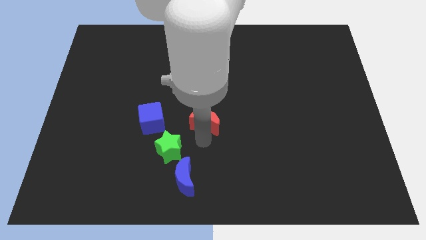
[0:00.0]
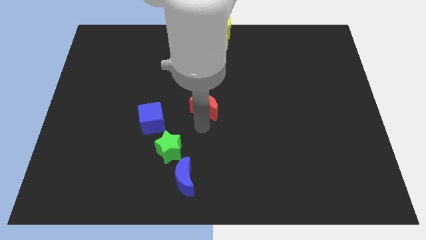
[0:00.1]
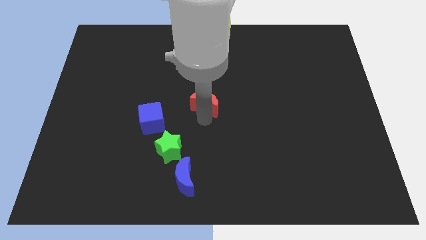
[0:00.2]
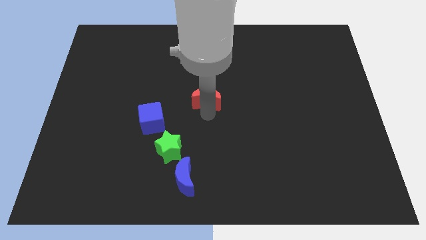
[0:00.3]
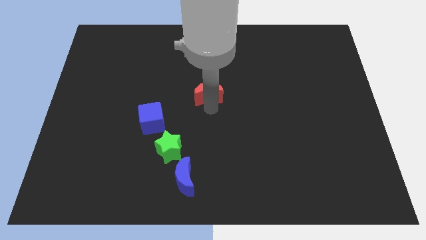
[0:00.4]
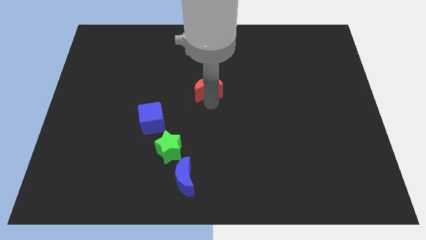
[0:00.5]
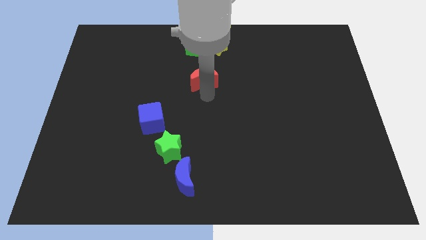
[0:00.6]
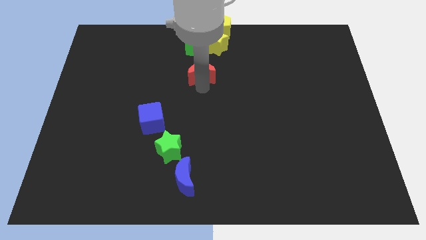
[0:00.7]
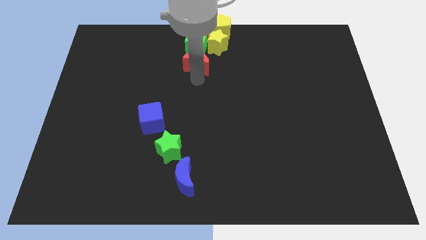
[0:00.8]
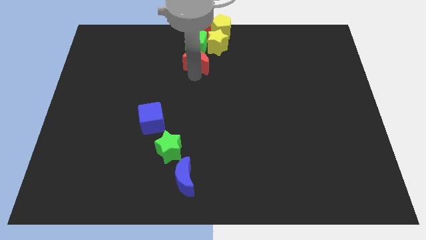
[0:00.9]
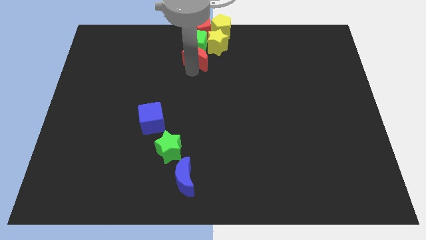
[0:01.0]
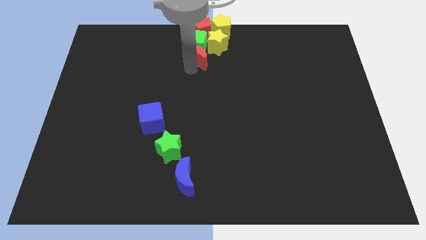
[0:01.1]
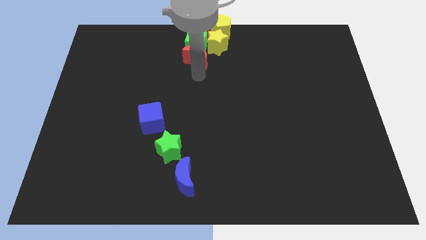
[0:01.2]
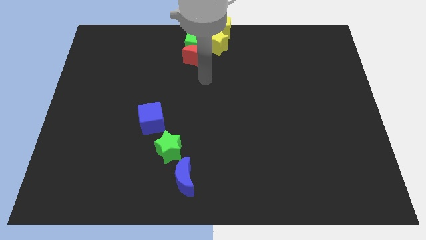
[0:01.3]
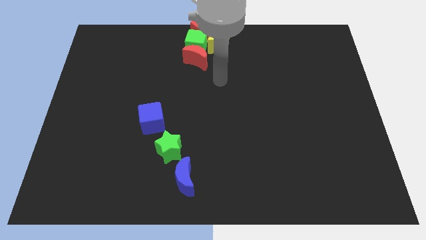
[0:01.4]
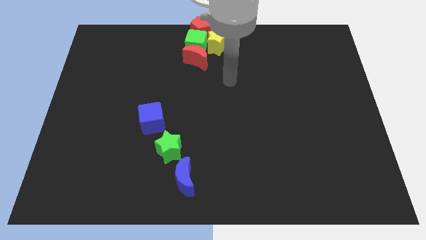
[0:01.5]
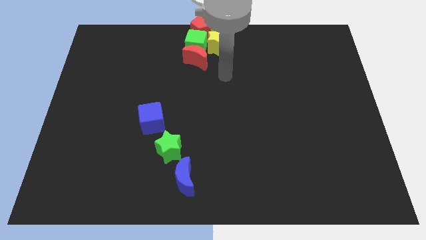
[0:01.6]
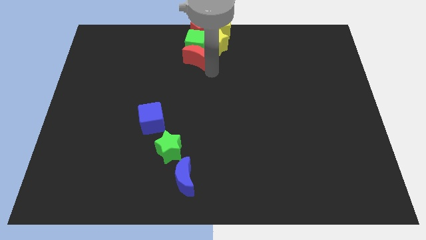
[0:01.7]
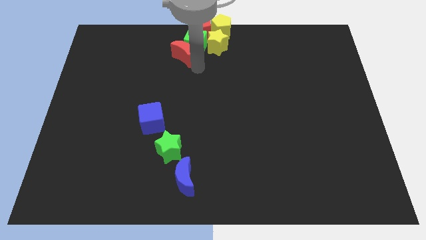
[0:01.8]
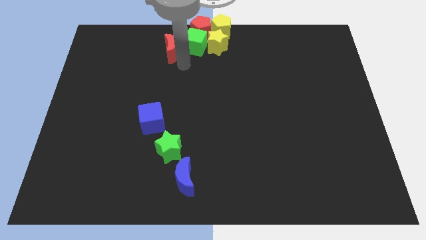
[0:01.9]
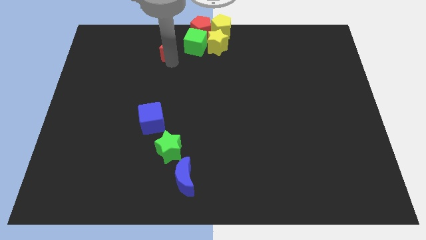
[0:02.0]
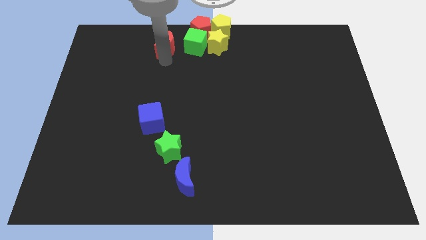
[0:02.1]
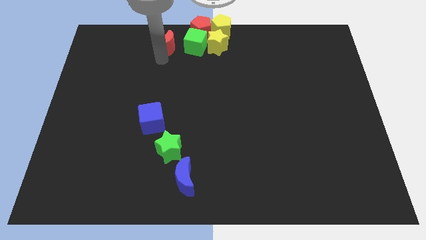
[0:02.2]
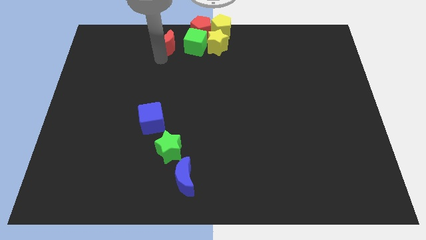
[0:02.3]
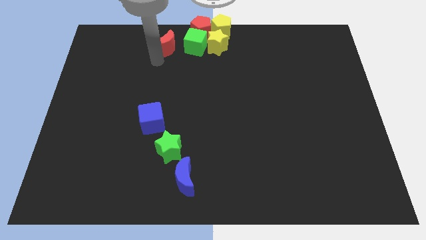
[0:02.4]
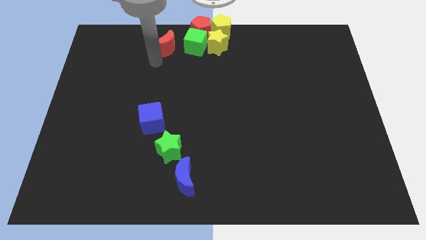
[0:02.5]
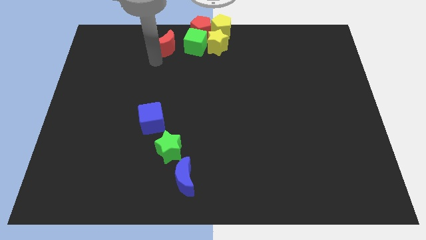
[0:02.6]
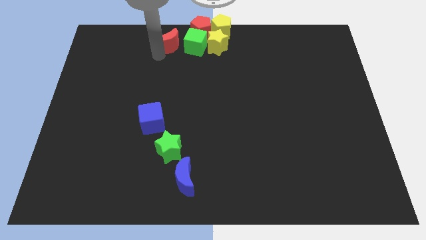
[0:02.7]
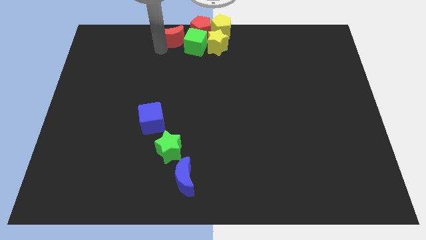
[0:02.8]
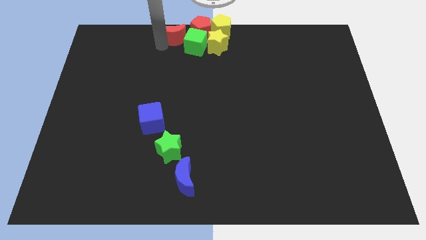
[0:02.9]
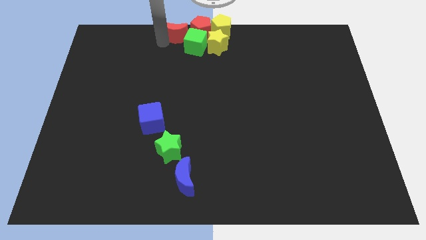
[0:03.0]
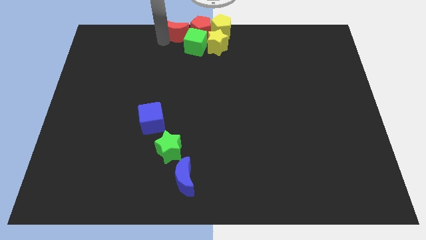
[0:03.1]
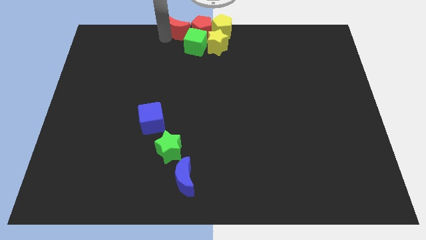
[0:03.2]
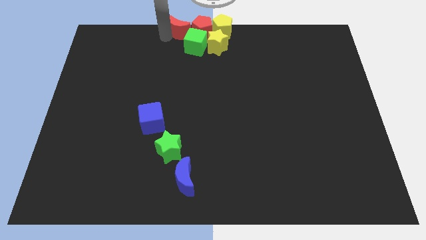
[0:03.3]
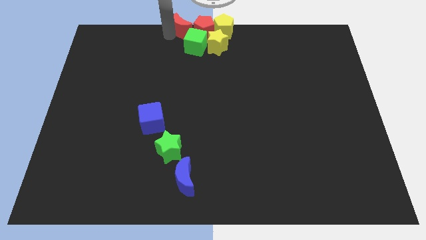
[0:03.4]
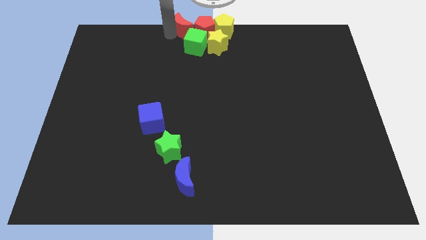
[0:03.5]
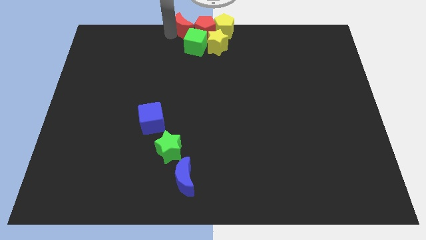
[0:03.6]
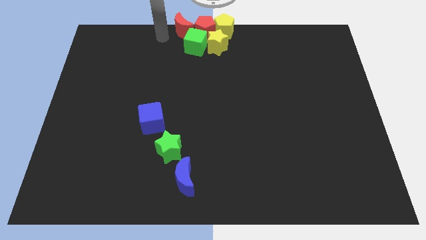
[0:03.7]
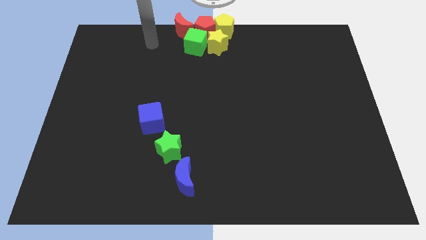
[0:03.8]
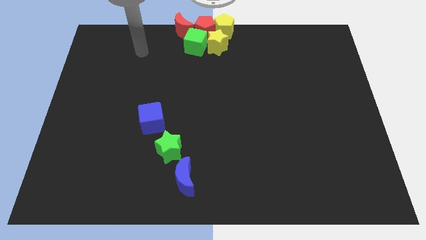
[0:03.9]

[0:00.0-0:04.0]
place red moon adjacent to red pentagon

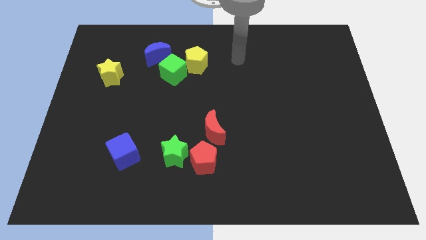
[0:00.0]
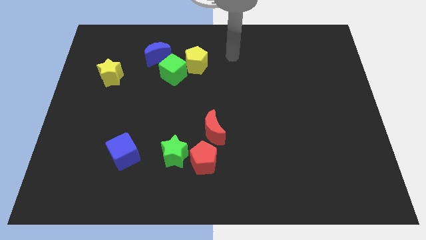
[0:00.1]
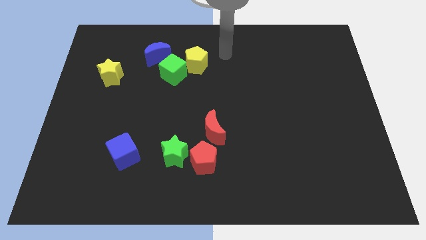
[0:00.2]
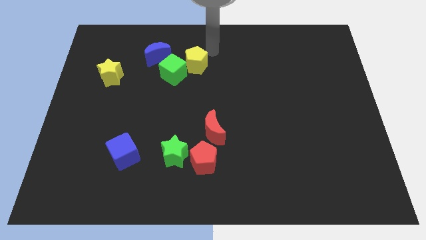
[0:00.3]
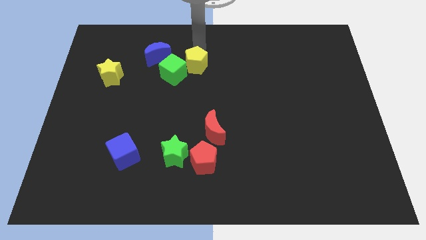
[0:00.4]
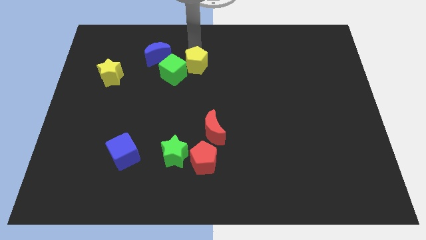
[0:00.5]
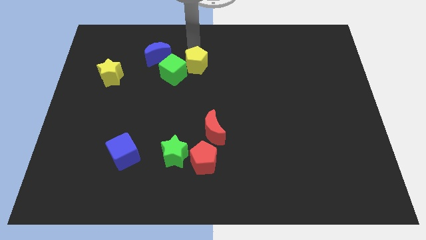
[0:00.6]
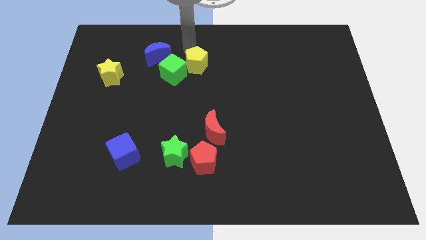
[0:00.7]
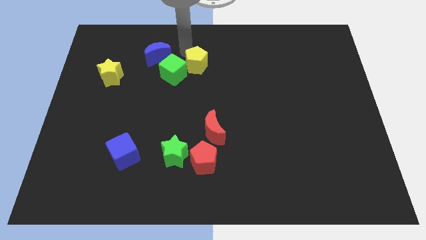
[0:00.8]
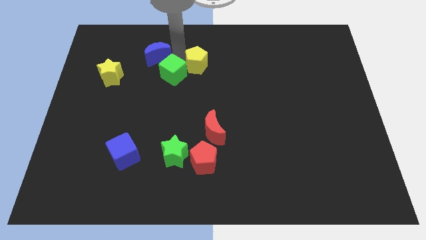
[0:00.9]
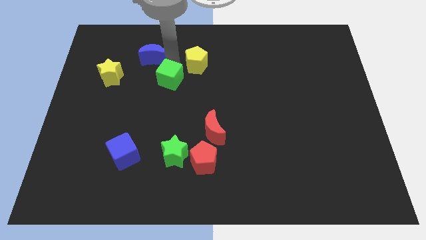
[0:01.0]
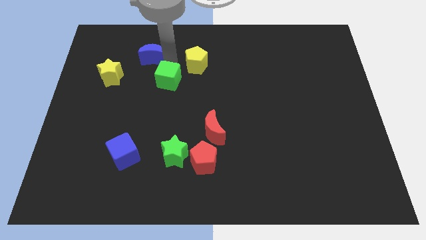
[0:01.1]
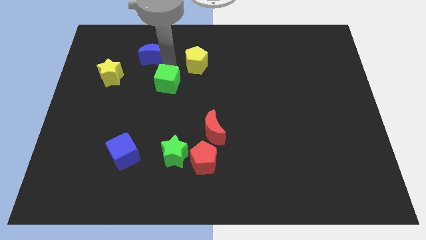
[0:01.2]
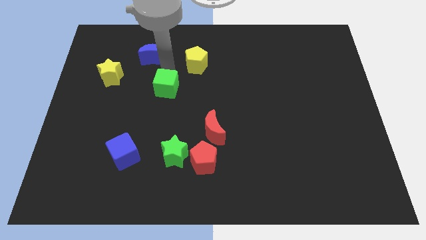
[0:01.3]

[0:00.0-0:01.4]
move green cube slightly down

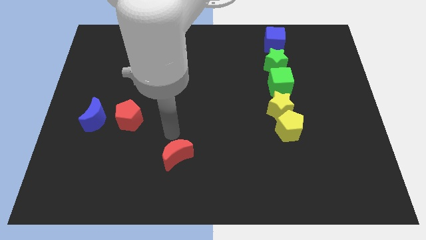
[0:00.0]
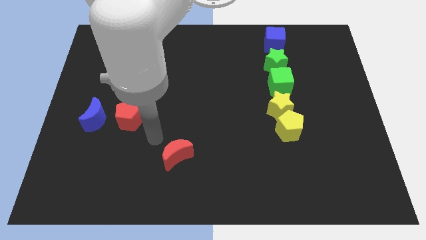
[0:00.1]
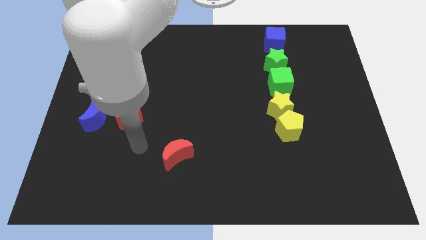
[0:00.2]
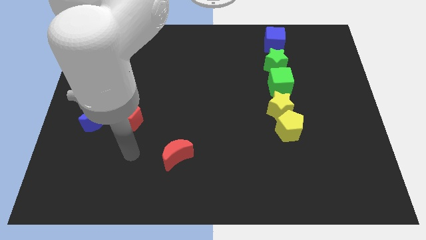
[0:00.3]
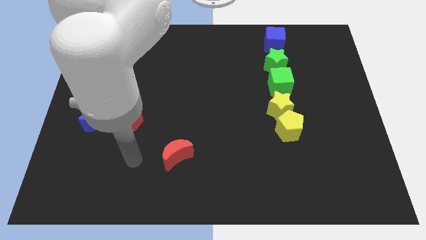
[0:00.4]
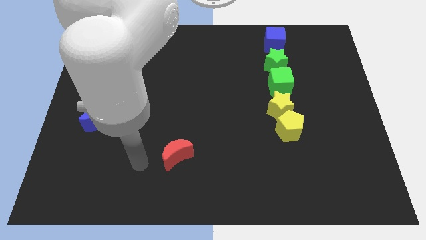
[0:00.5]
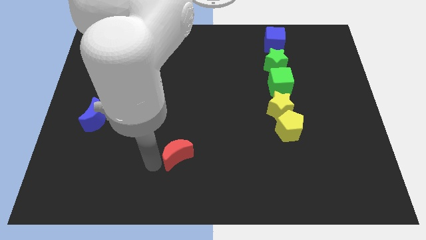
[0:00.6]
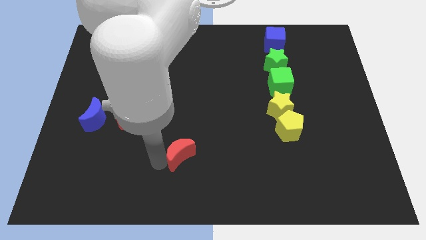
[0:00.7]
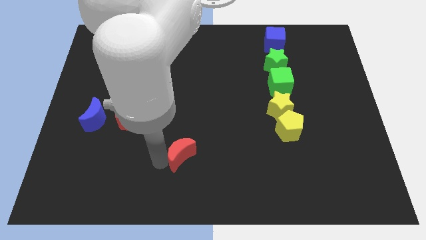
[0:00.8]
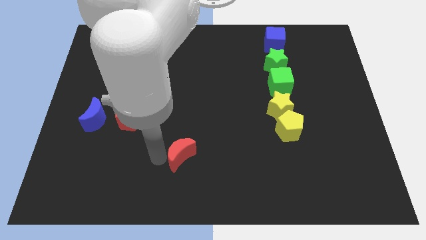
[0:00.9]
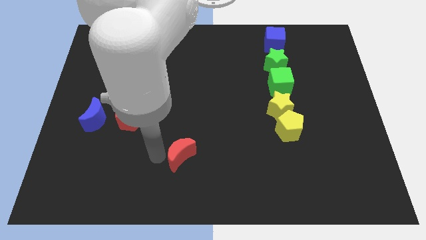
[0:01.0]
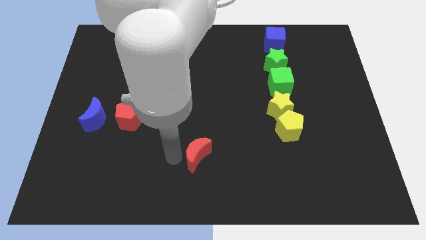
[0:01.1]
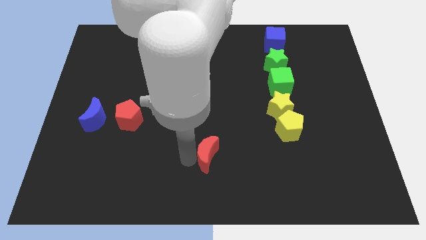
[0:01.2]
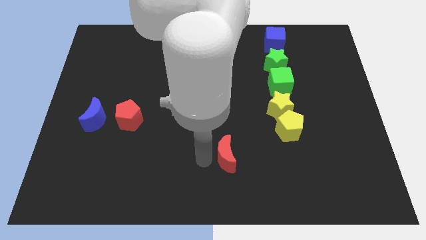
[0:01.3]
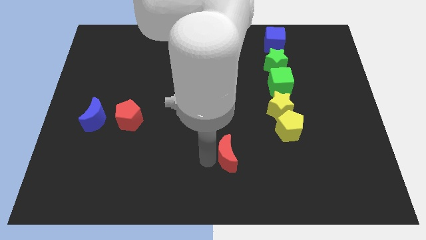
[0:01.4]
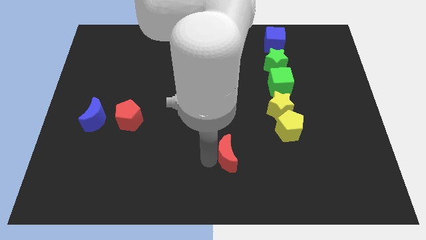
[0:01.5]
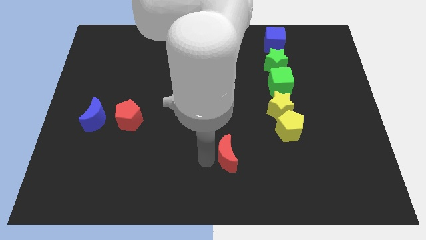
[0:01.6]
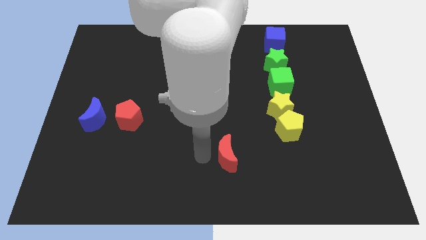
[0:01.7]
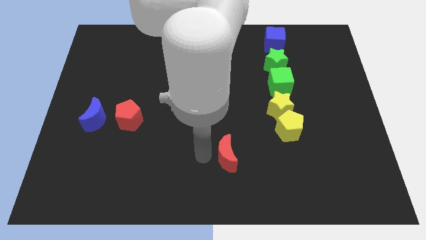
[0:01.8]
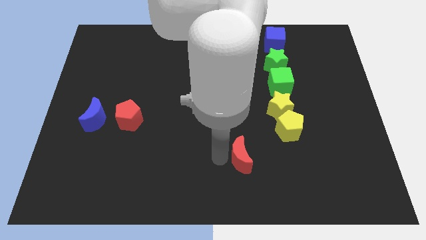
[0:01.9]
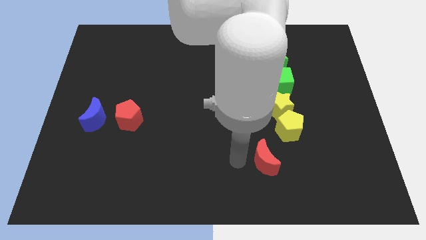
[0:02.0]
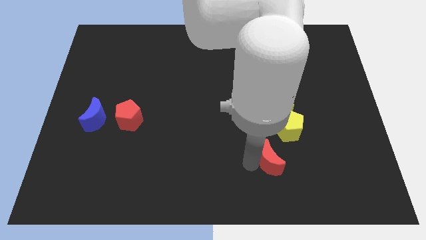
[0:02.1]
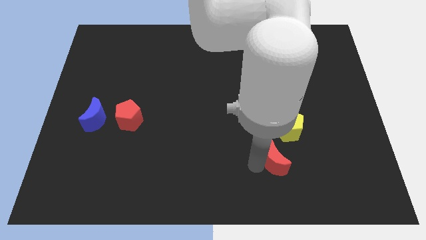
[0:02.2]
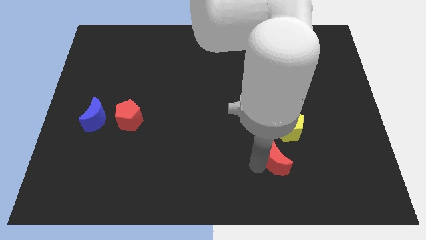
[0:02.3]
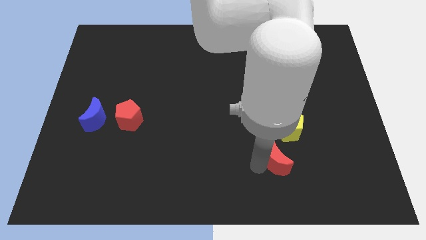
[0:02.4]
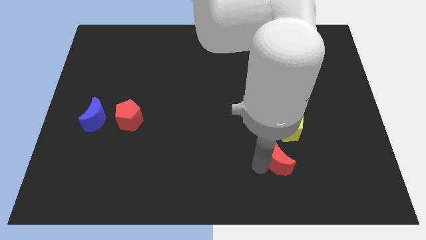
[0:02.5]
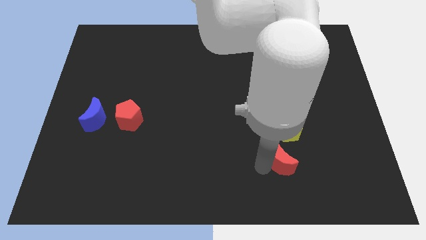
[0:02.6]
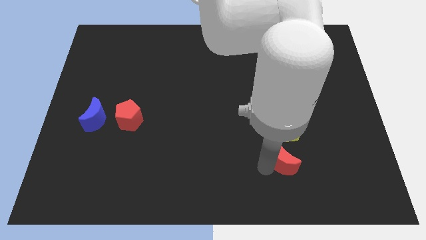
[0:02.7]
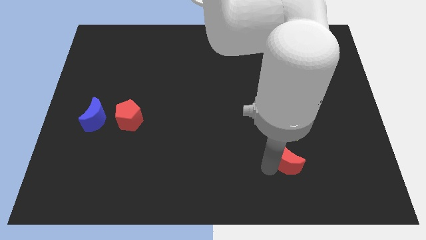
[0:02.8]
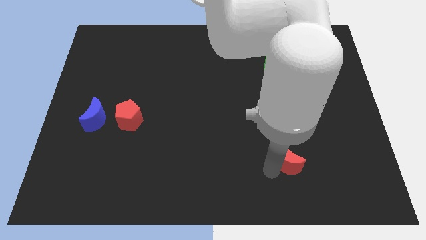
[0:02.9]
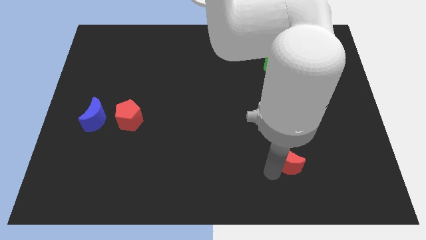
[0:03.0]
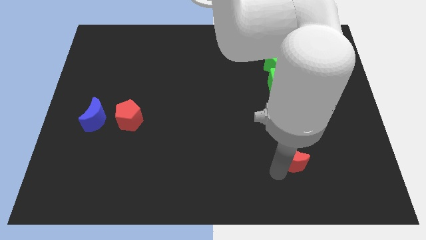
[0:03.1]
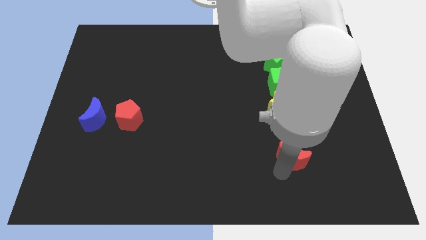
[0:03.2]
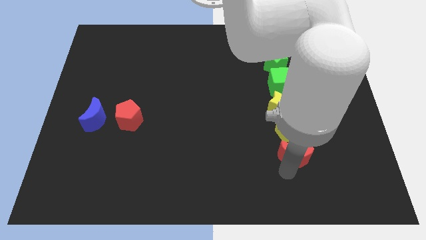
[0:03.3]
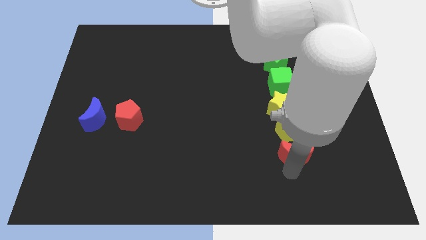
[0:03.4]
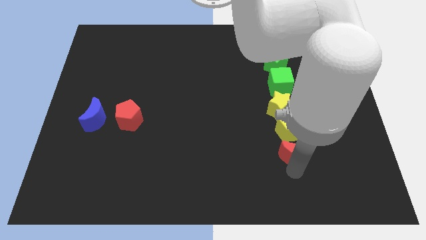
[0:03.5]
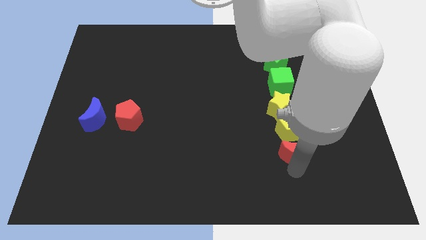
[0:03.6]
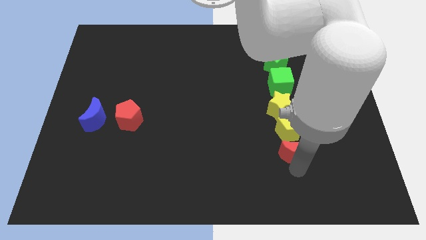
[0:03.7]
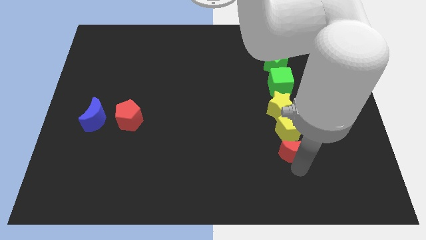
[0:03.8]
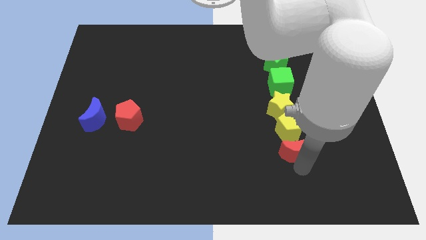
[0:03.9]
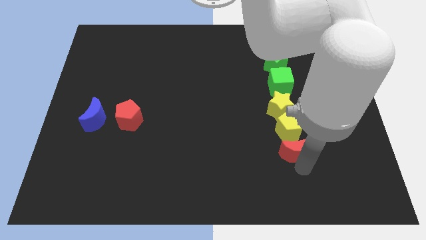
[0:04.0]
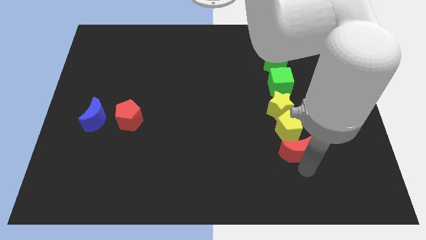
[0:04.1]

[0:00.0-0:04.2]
slide red moon towards yellow pentagon
